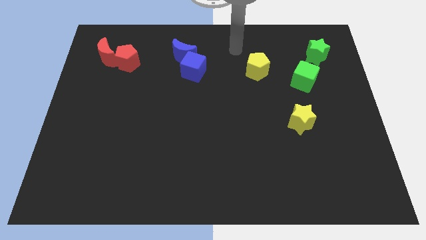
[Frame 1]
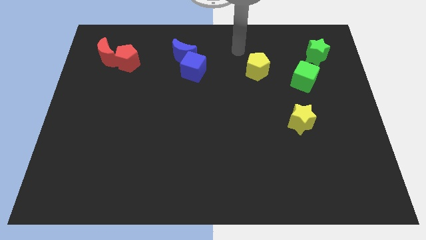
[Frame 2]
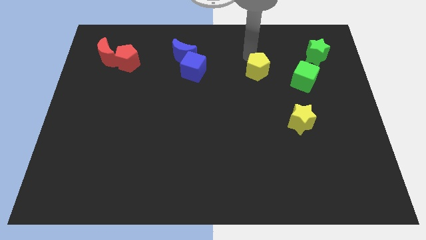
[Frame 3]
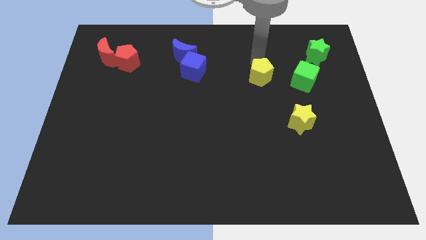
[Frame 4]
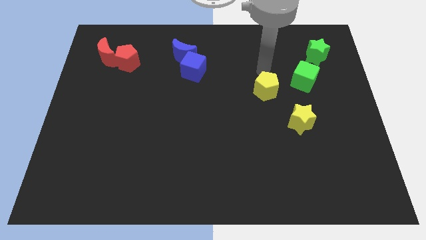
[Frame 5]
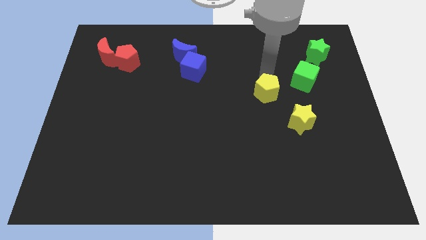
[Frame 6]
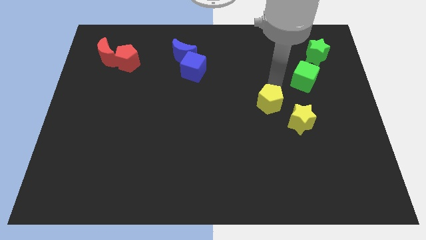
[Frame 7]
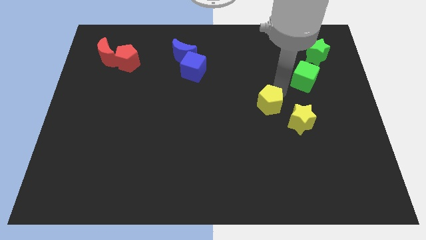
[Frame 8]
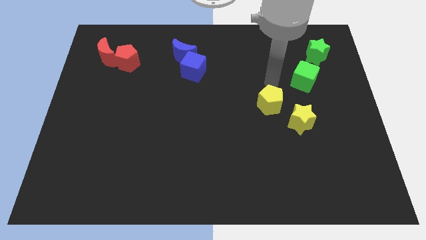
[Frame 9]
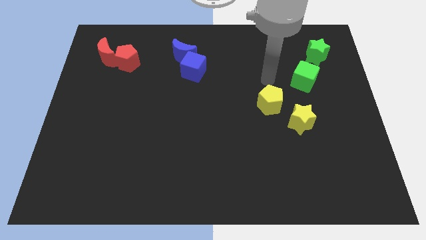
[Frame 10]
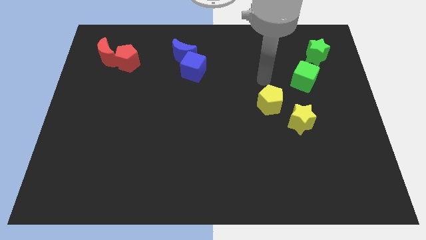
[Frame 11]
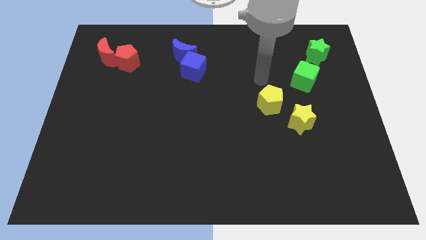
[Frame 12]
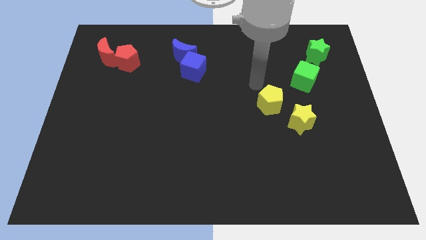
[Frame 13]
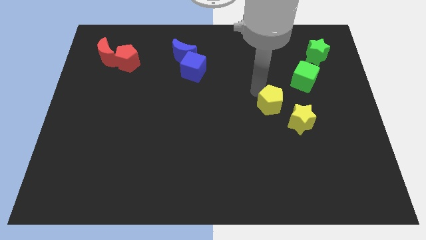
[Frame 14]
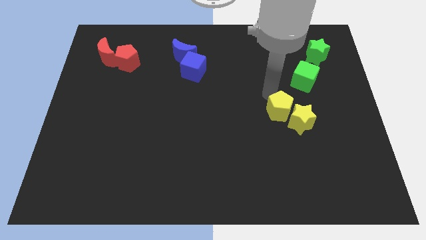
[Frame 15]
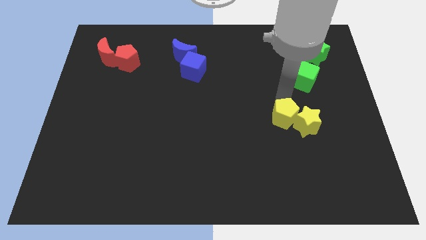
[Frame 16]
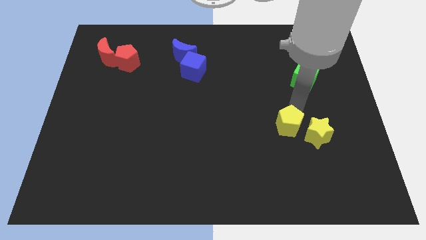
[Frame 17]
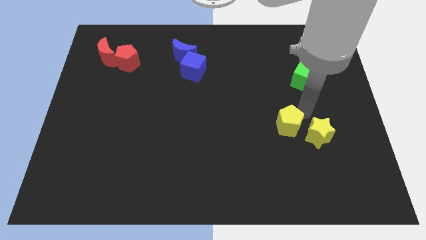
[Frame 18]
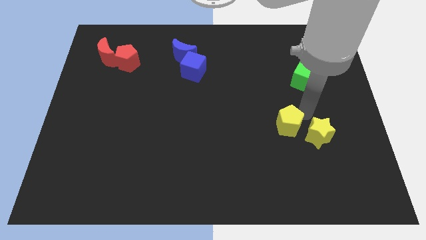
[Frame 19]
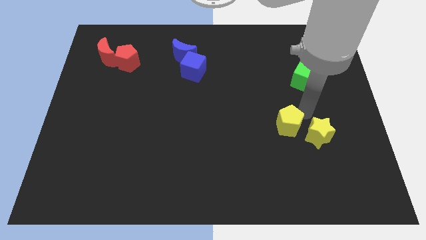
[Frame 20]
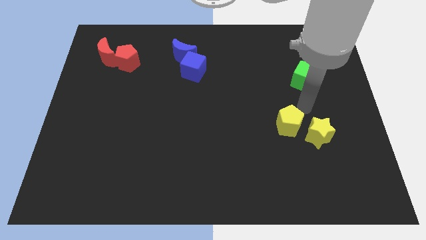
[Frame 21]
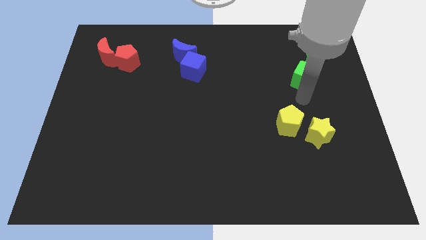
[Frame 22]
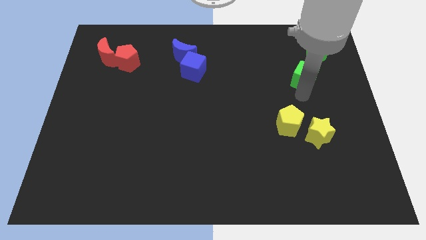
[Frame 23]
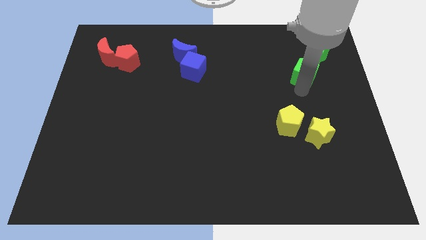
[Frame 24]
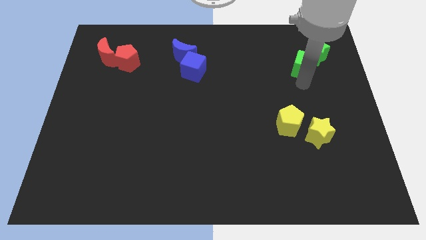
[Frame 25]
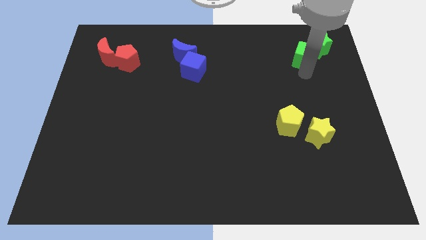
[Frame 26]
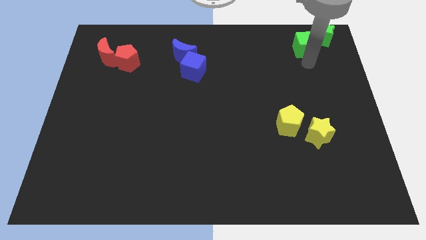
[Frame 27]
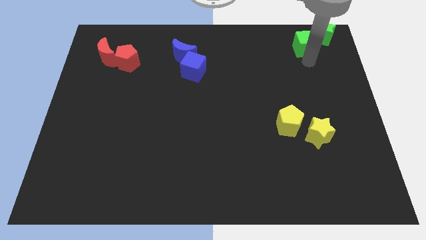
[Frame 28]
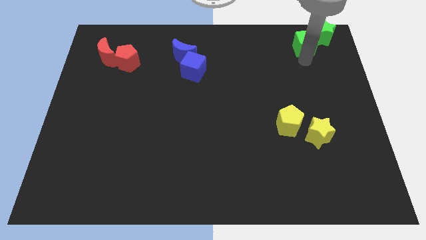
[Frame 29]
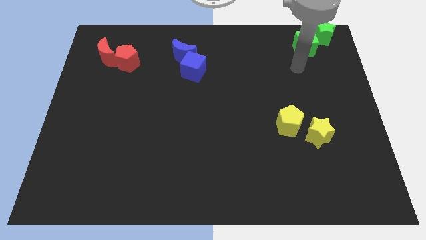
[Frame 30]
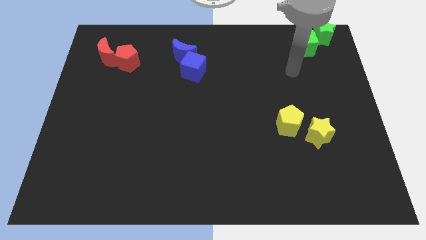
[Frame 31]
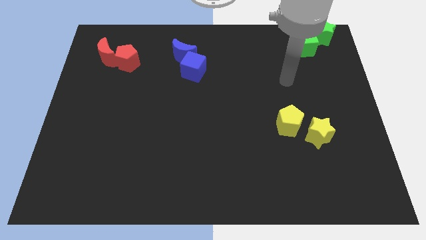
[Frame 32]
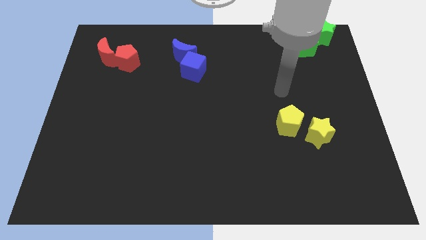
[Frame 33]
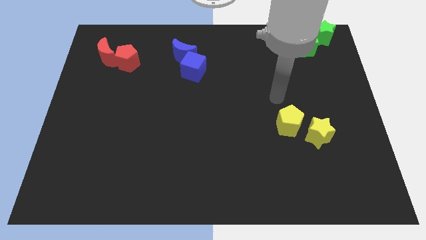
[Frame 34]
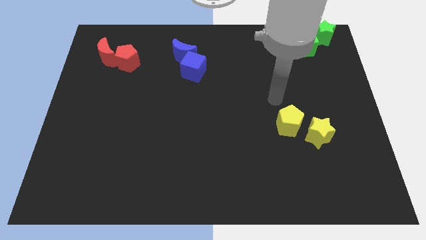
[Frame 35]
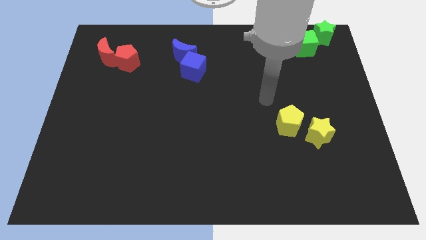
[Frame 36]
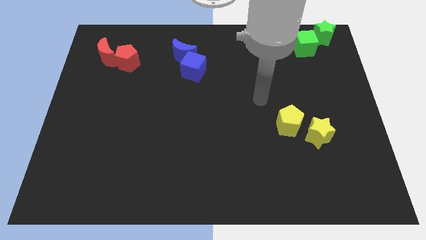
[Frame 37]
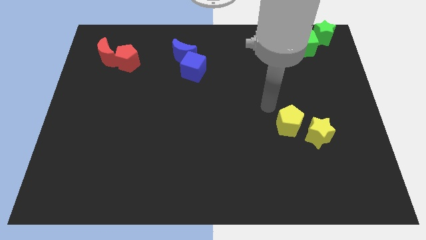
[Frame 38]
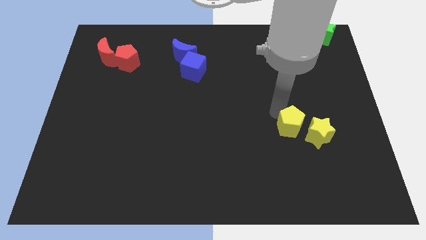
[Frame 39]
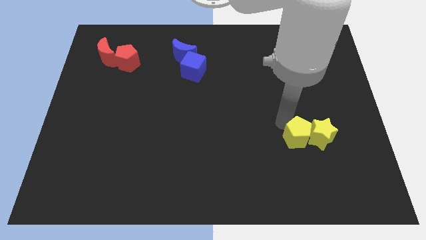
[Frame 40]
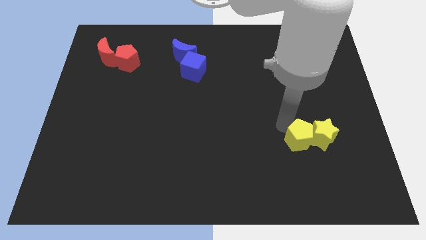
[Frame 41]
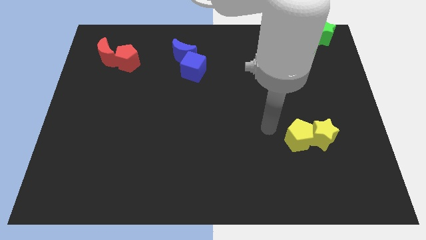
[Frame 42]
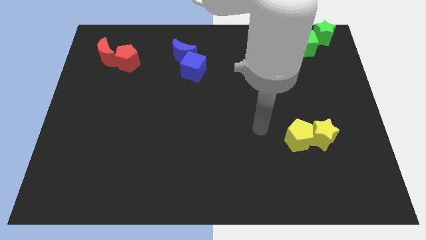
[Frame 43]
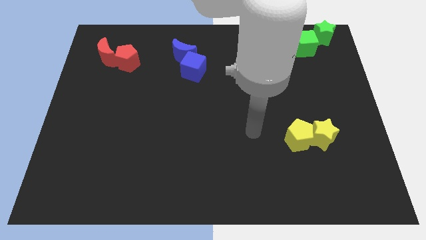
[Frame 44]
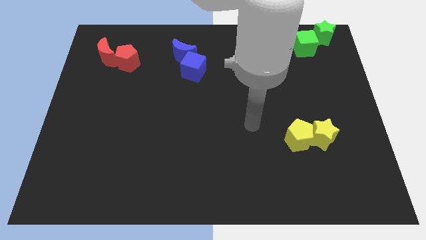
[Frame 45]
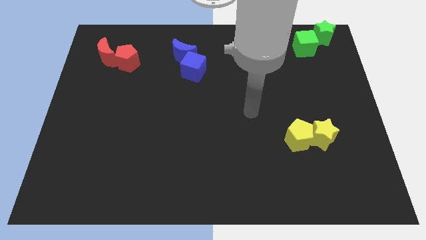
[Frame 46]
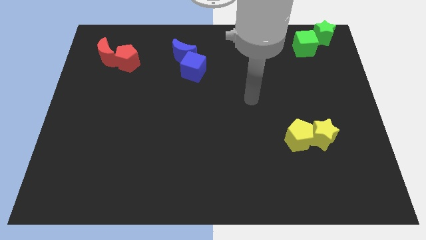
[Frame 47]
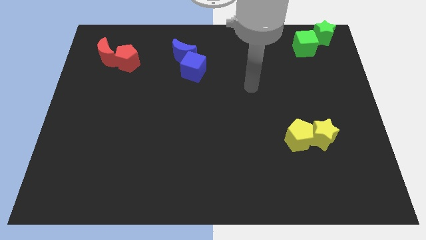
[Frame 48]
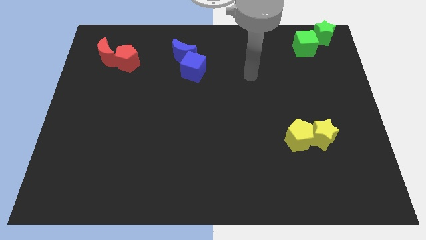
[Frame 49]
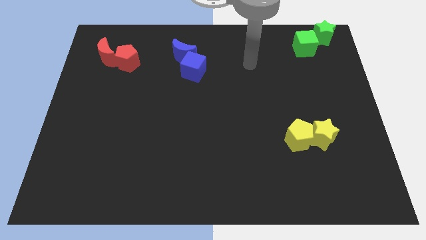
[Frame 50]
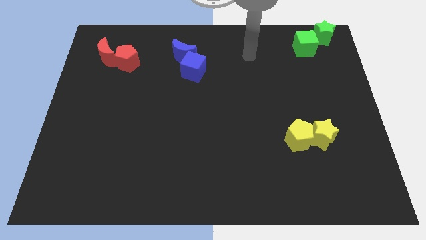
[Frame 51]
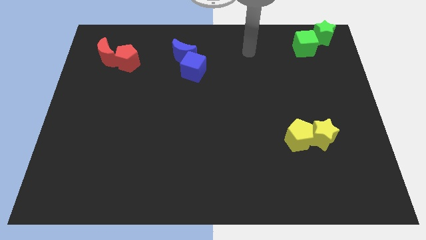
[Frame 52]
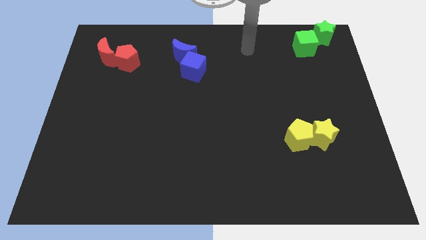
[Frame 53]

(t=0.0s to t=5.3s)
move the yellow pentagon to the left side of the yellow star

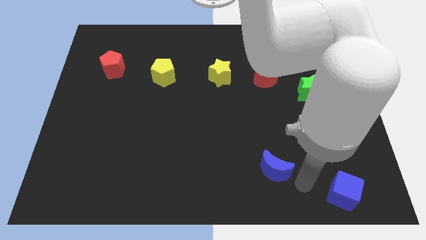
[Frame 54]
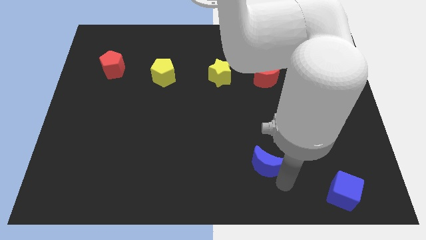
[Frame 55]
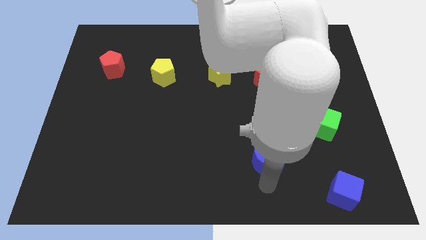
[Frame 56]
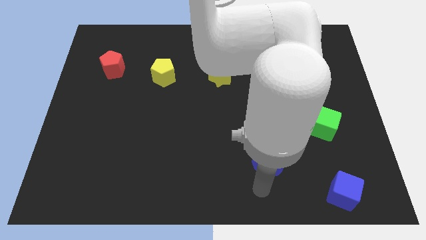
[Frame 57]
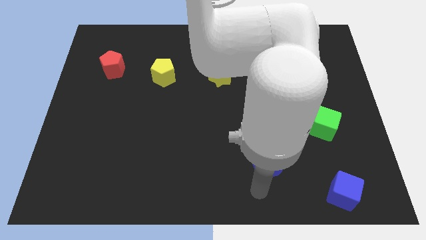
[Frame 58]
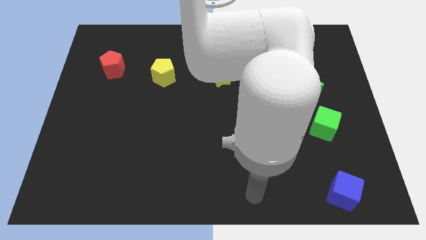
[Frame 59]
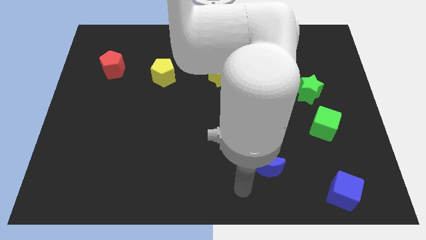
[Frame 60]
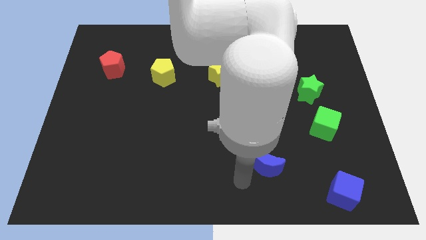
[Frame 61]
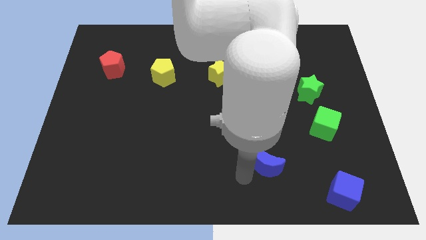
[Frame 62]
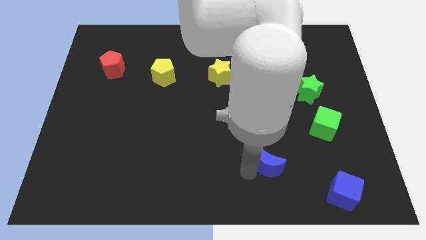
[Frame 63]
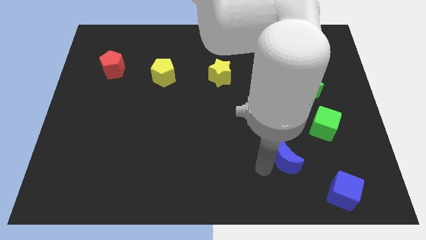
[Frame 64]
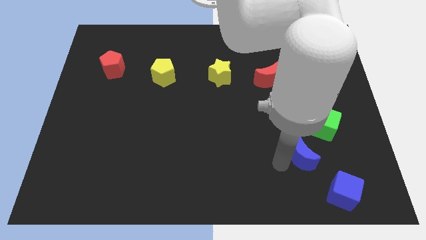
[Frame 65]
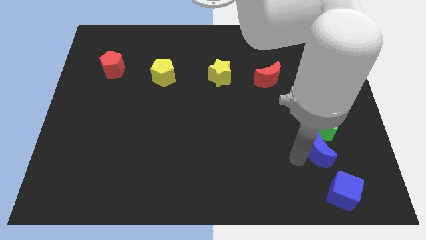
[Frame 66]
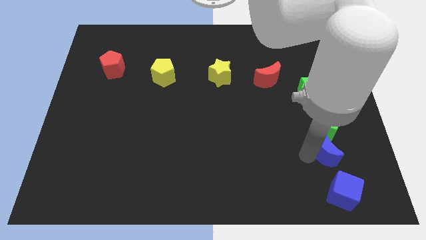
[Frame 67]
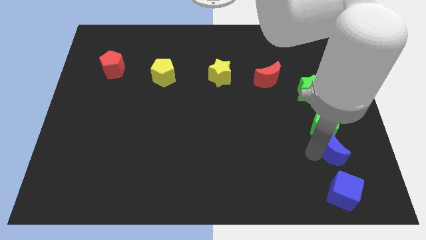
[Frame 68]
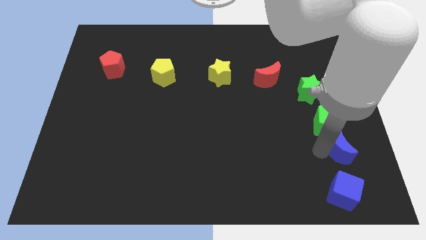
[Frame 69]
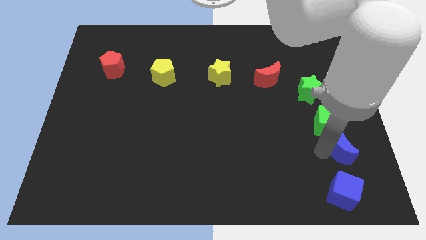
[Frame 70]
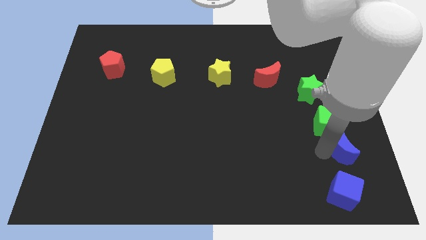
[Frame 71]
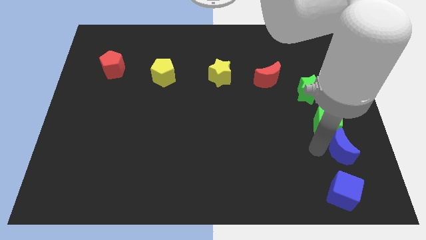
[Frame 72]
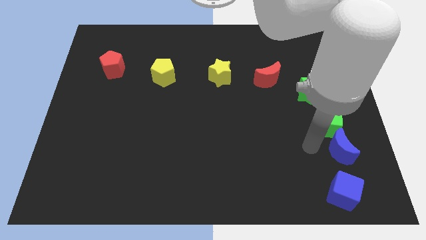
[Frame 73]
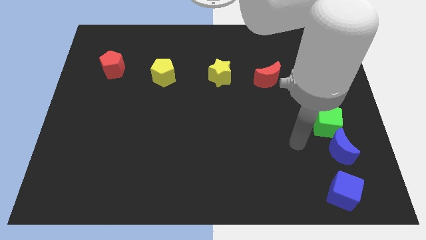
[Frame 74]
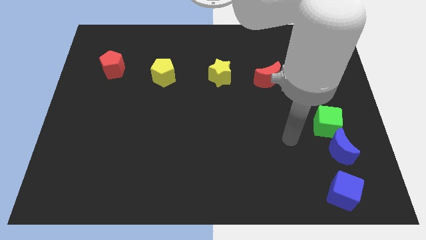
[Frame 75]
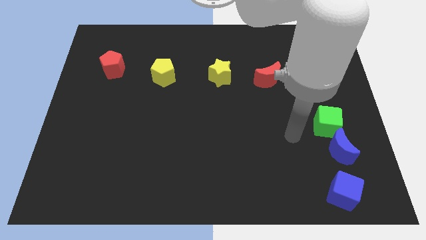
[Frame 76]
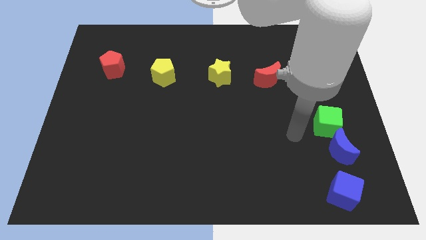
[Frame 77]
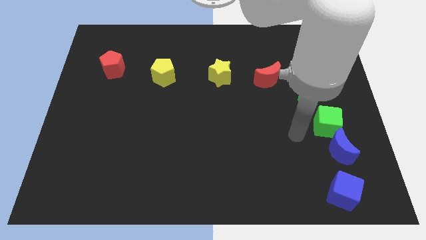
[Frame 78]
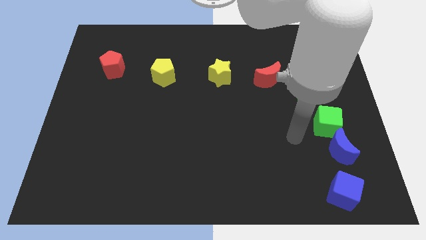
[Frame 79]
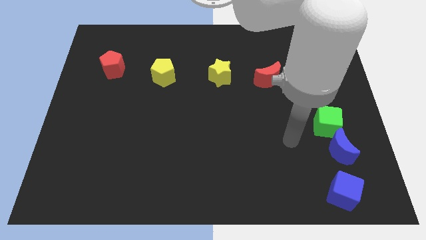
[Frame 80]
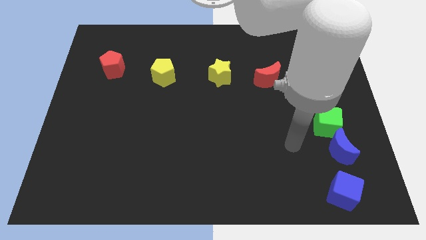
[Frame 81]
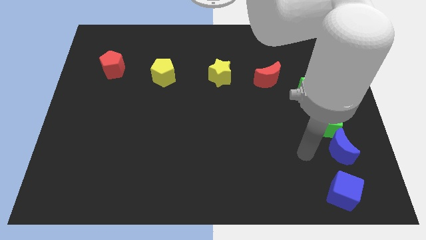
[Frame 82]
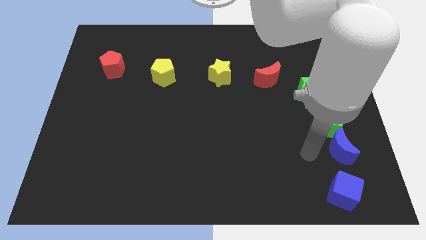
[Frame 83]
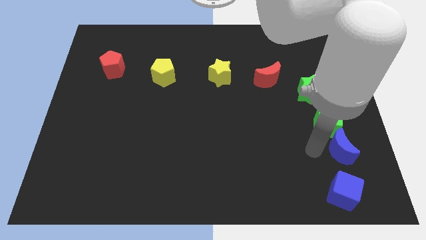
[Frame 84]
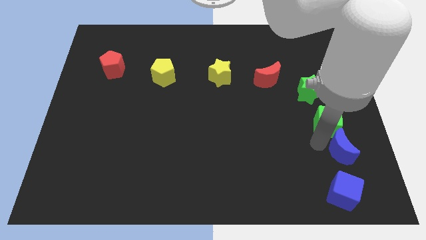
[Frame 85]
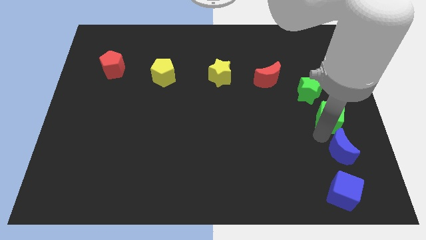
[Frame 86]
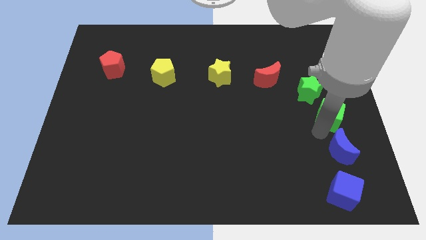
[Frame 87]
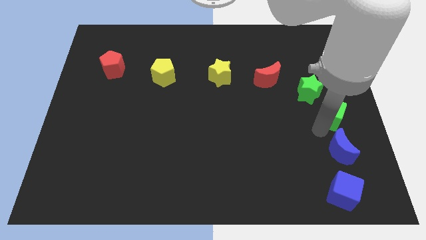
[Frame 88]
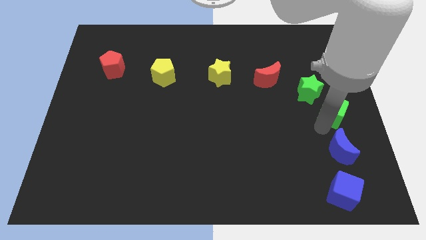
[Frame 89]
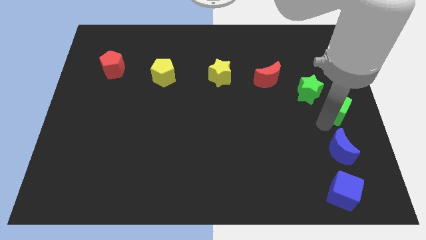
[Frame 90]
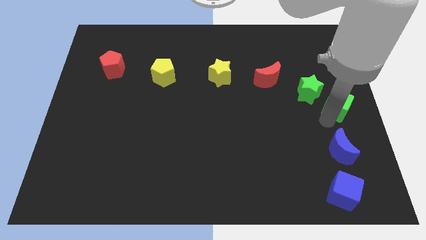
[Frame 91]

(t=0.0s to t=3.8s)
place the blue moon and green cube vertically above the blue cube
